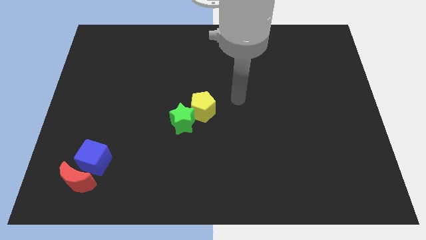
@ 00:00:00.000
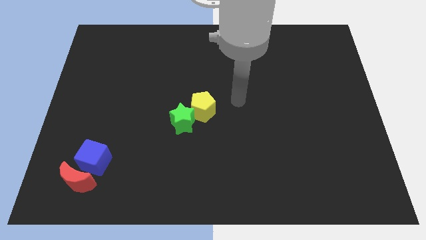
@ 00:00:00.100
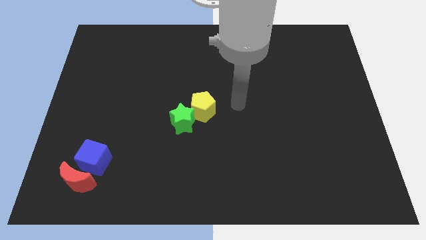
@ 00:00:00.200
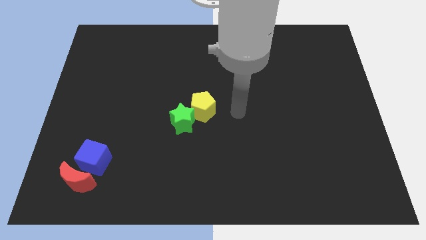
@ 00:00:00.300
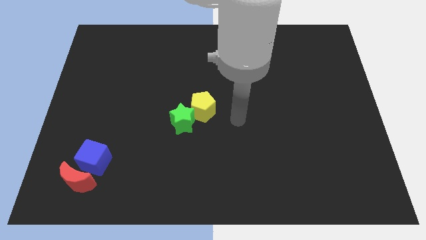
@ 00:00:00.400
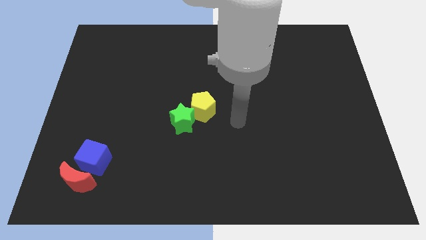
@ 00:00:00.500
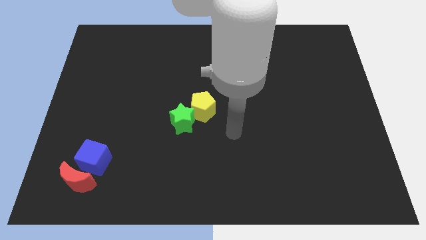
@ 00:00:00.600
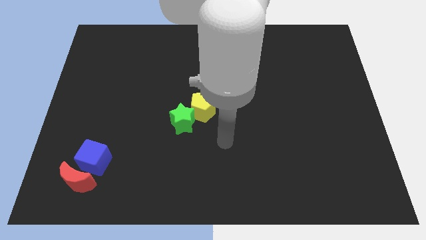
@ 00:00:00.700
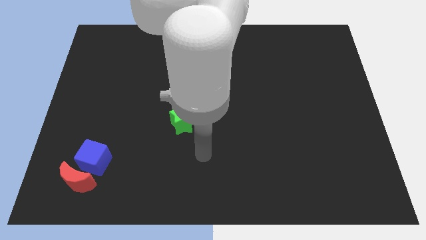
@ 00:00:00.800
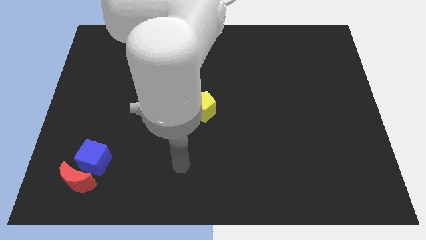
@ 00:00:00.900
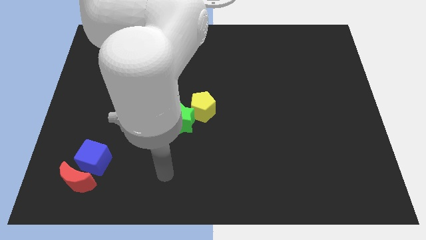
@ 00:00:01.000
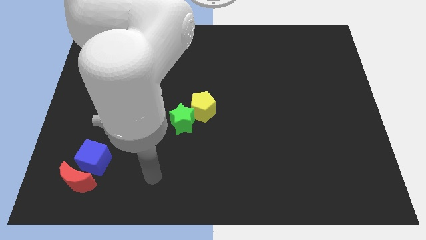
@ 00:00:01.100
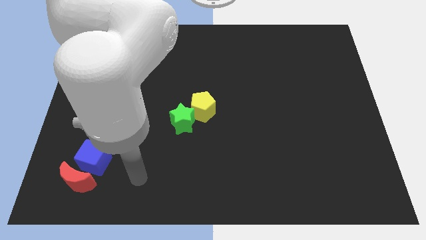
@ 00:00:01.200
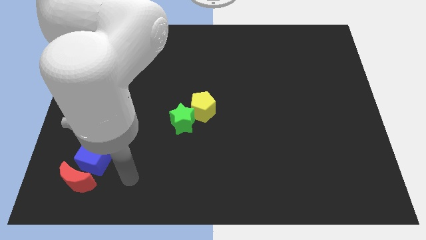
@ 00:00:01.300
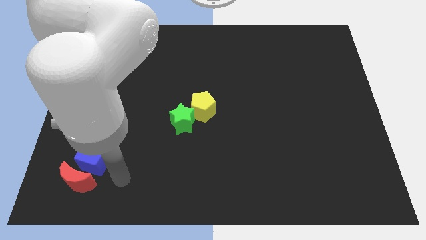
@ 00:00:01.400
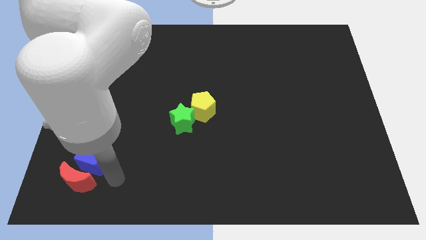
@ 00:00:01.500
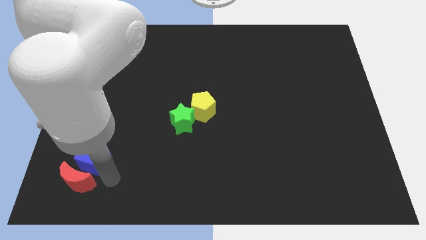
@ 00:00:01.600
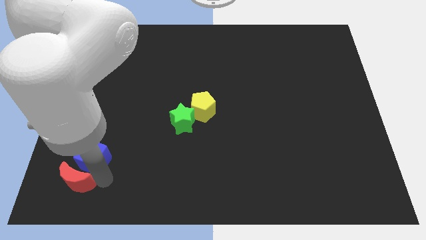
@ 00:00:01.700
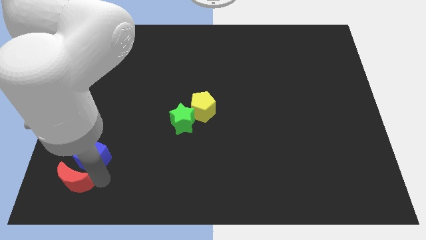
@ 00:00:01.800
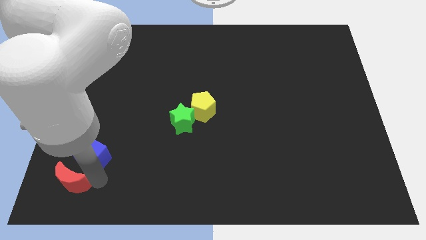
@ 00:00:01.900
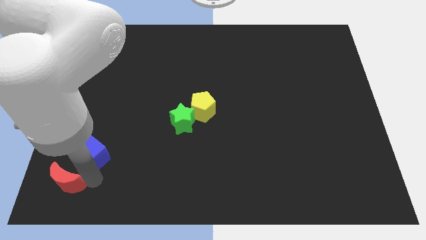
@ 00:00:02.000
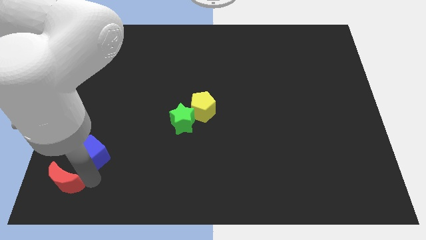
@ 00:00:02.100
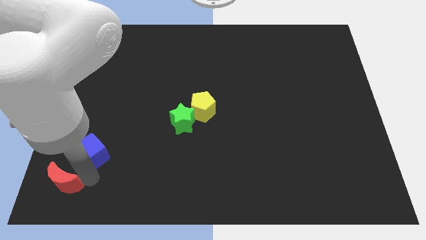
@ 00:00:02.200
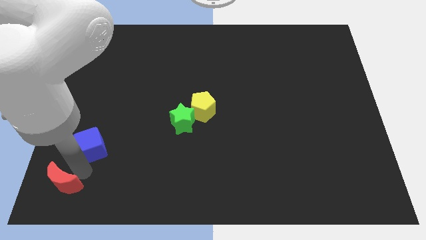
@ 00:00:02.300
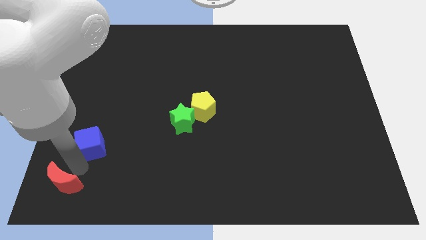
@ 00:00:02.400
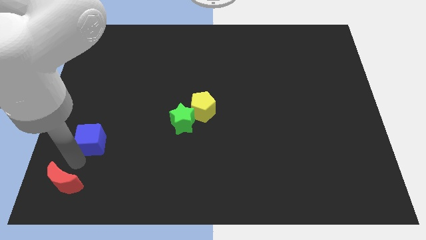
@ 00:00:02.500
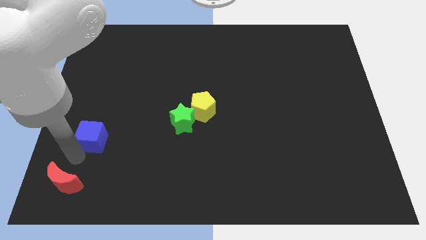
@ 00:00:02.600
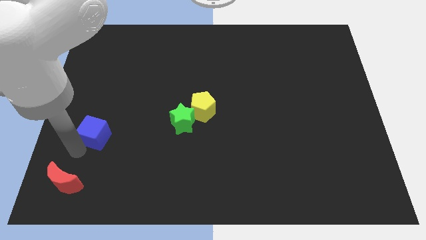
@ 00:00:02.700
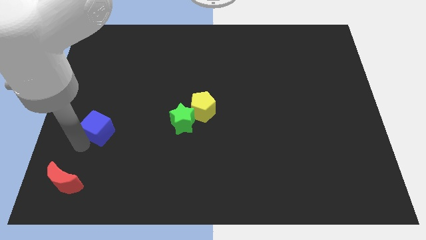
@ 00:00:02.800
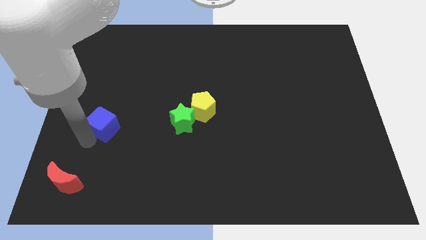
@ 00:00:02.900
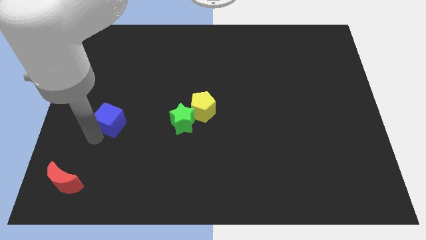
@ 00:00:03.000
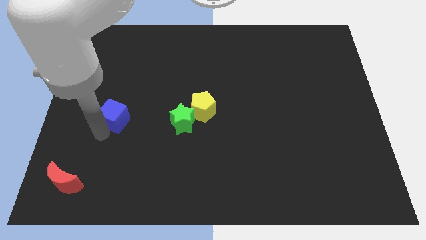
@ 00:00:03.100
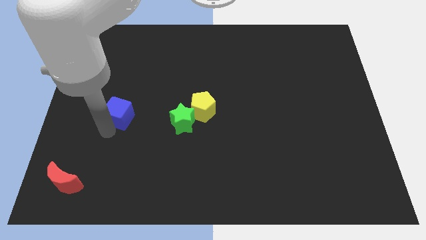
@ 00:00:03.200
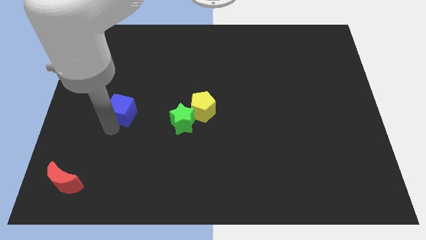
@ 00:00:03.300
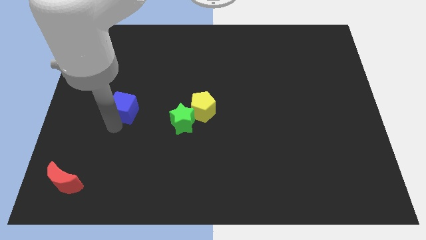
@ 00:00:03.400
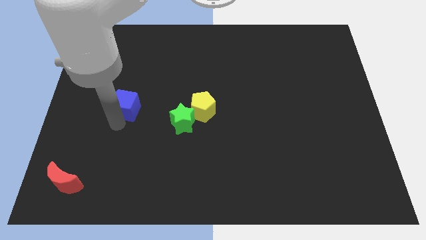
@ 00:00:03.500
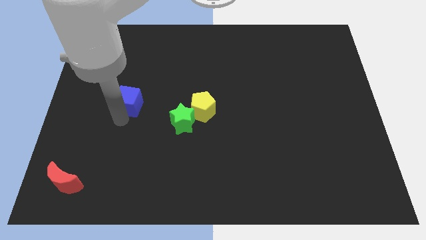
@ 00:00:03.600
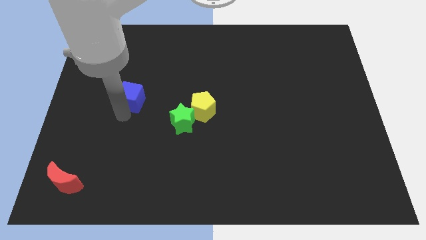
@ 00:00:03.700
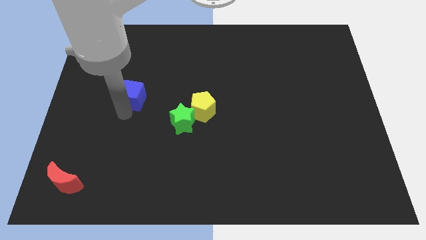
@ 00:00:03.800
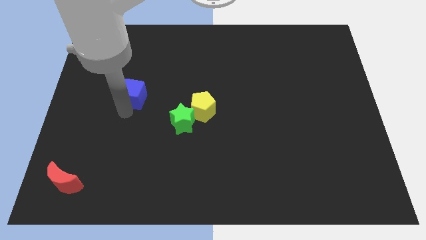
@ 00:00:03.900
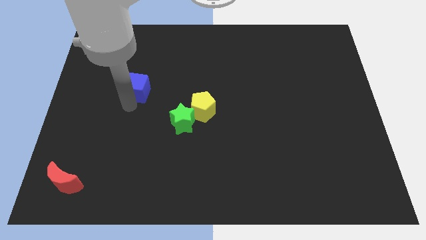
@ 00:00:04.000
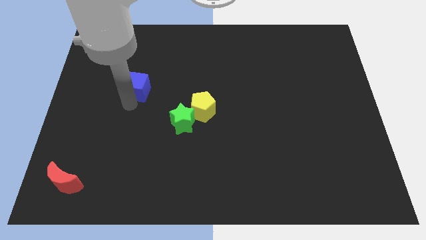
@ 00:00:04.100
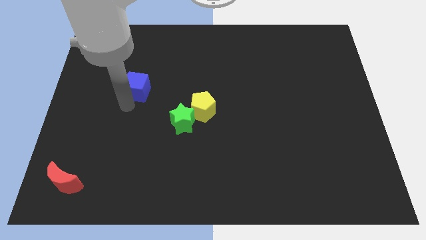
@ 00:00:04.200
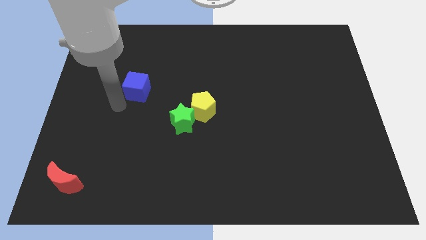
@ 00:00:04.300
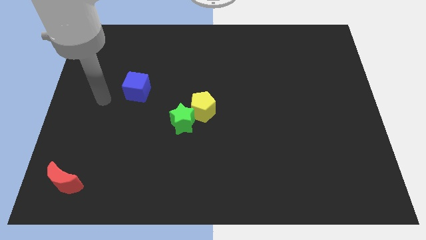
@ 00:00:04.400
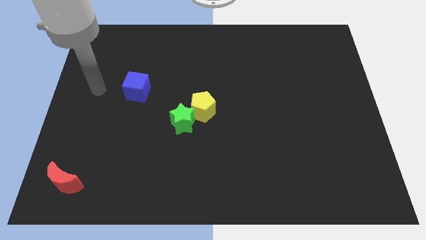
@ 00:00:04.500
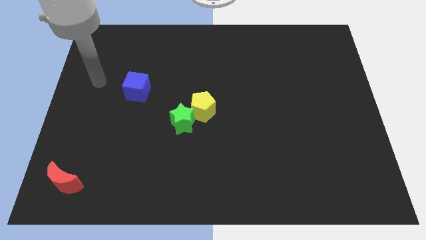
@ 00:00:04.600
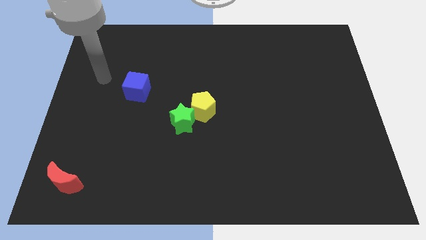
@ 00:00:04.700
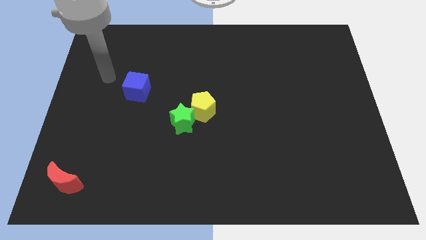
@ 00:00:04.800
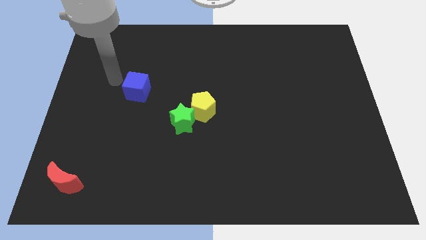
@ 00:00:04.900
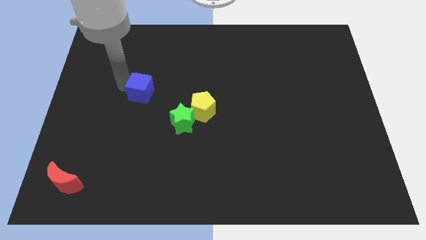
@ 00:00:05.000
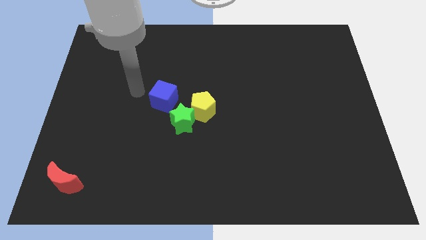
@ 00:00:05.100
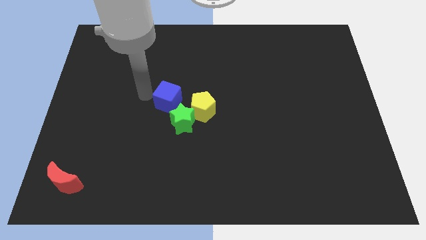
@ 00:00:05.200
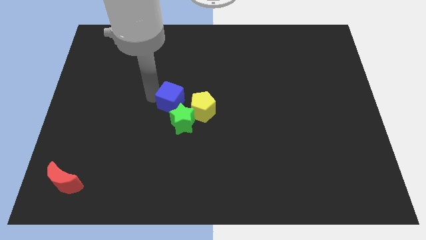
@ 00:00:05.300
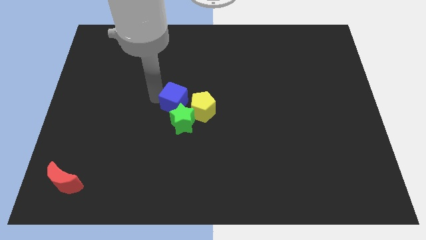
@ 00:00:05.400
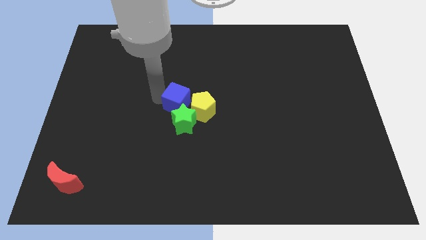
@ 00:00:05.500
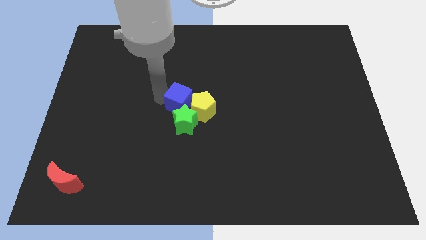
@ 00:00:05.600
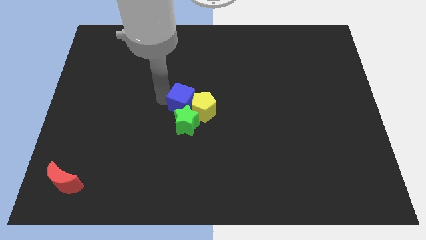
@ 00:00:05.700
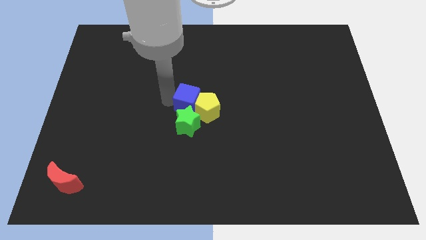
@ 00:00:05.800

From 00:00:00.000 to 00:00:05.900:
put the cube to the yellow block

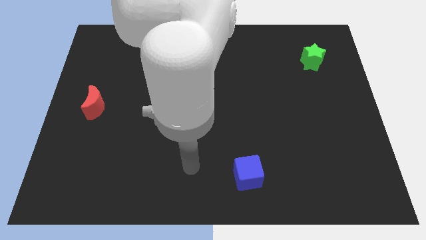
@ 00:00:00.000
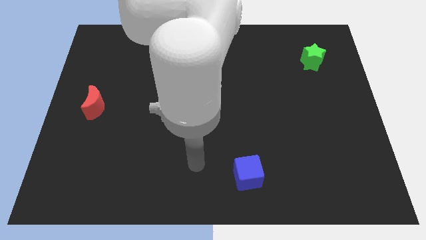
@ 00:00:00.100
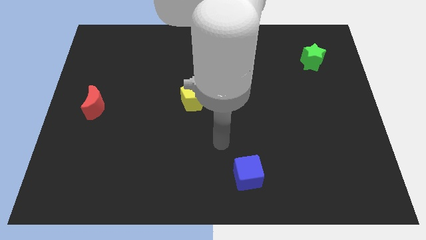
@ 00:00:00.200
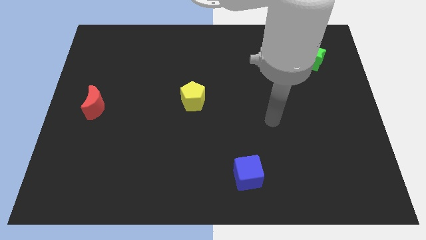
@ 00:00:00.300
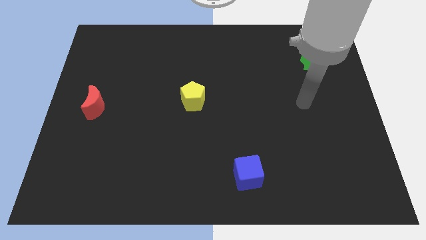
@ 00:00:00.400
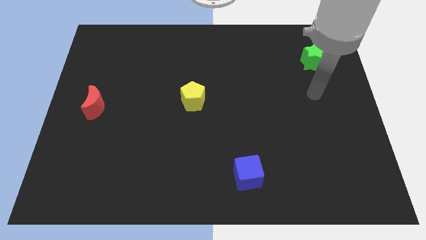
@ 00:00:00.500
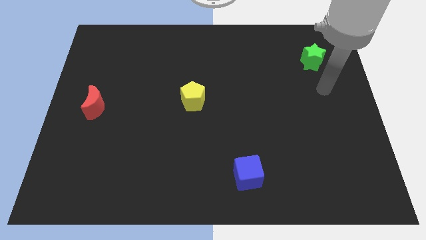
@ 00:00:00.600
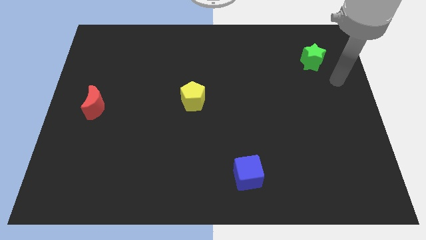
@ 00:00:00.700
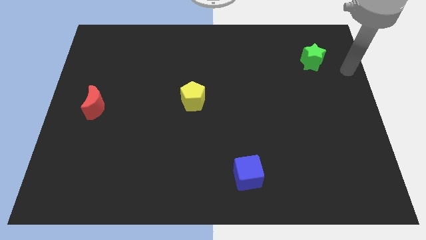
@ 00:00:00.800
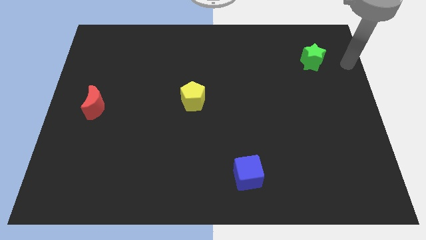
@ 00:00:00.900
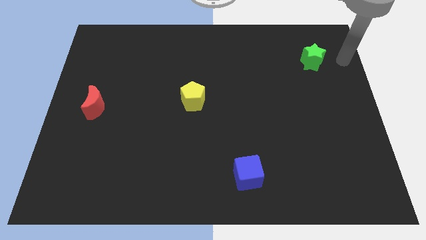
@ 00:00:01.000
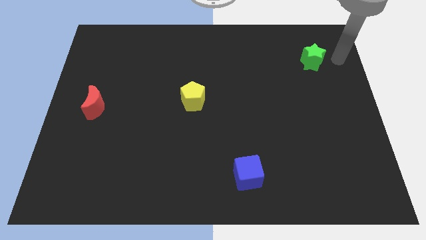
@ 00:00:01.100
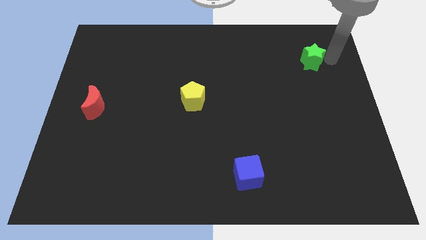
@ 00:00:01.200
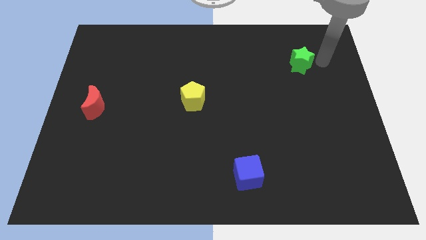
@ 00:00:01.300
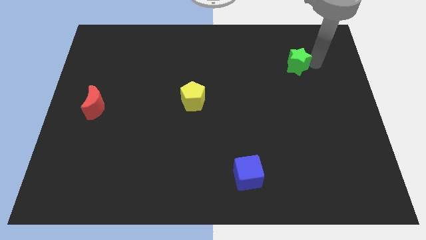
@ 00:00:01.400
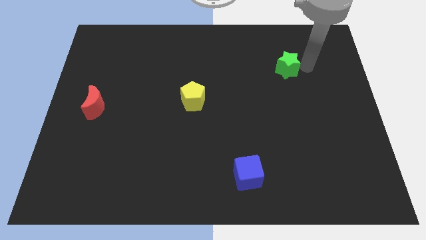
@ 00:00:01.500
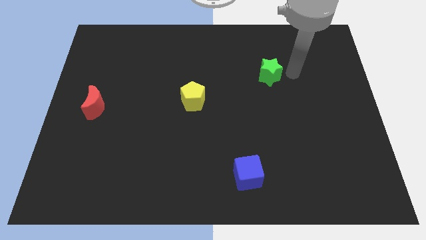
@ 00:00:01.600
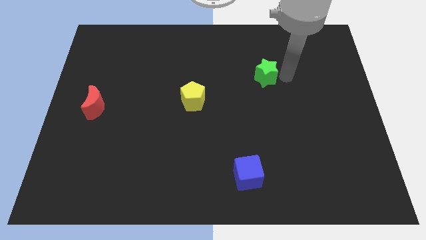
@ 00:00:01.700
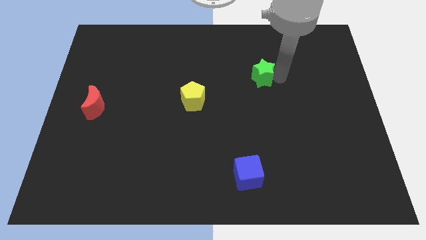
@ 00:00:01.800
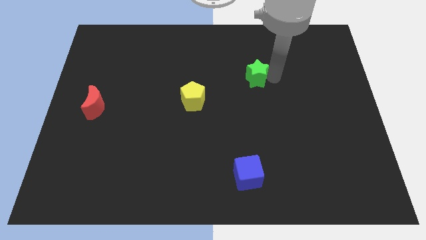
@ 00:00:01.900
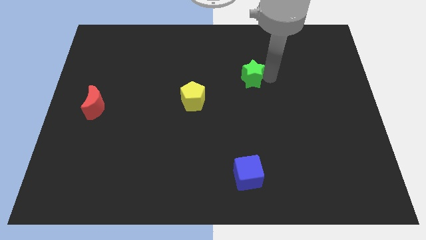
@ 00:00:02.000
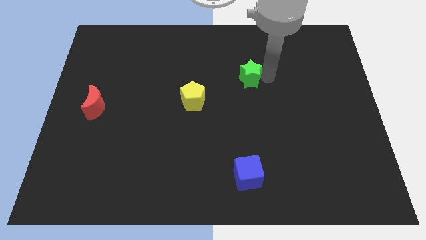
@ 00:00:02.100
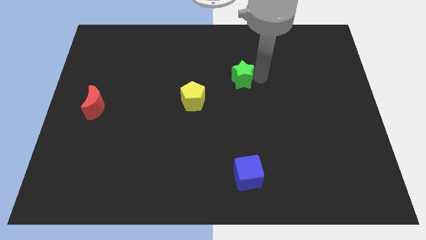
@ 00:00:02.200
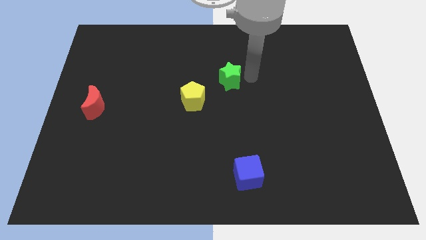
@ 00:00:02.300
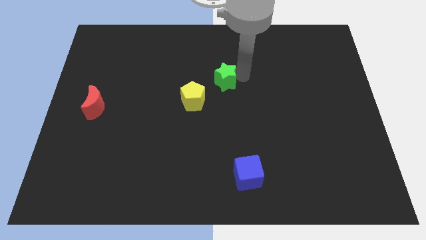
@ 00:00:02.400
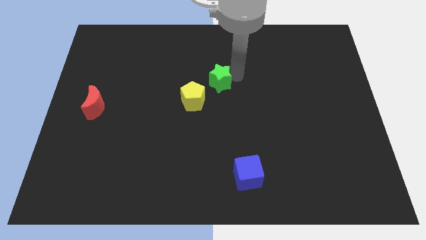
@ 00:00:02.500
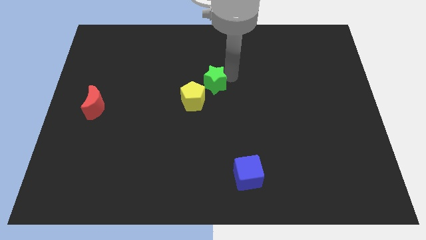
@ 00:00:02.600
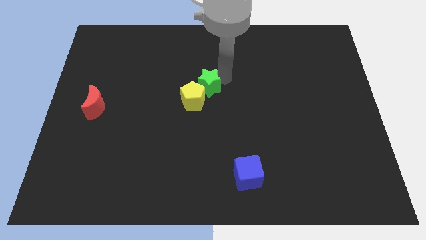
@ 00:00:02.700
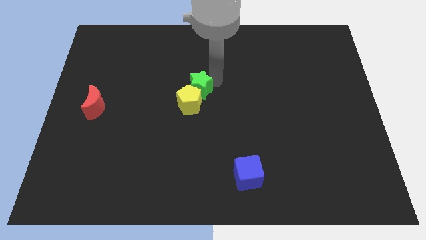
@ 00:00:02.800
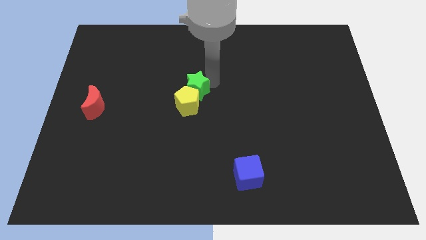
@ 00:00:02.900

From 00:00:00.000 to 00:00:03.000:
slide the green block next to the yellow block
